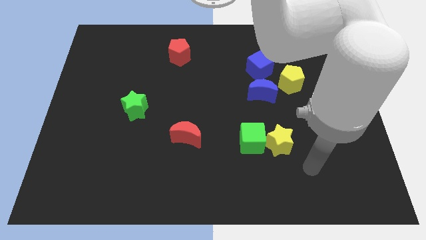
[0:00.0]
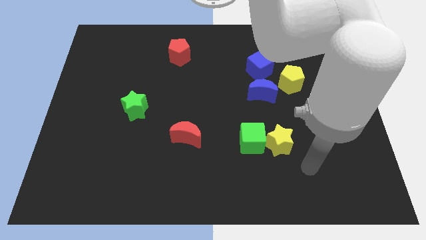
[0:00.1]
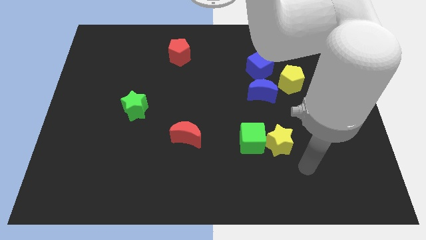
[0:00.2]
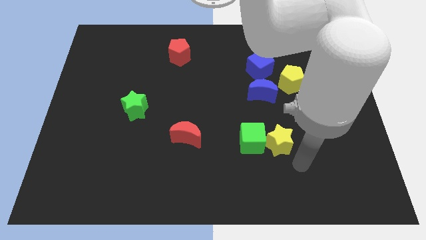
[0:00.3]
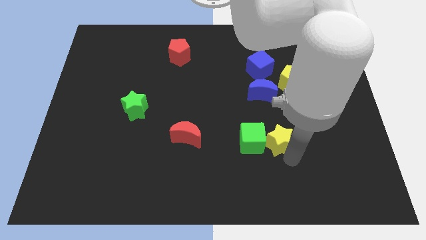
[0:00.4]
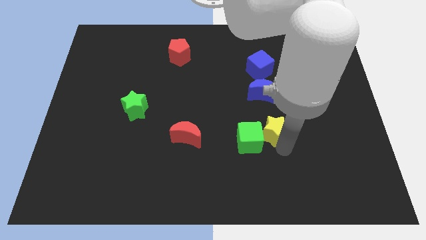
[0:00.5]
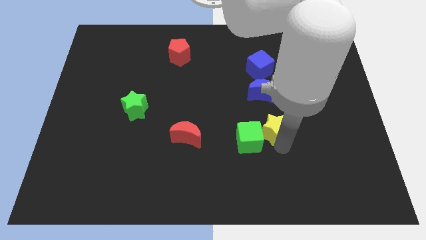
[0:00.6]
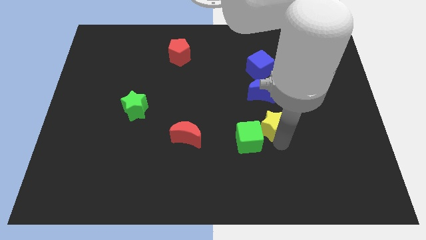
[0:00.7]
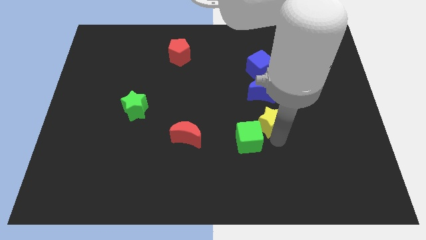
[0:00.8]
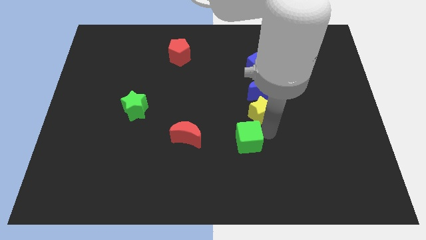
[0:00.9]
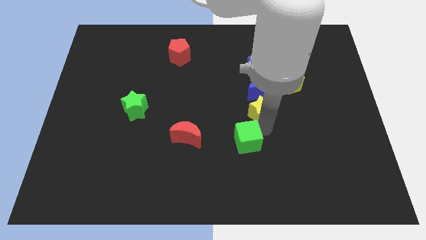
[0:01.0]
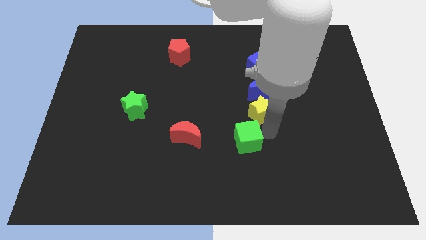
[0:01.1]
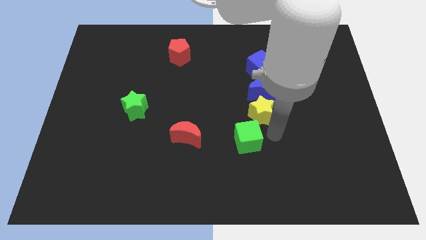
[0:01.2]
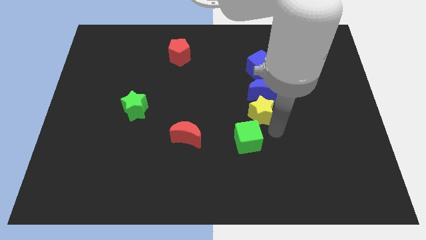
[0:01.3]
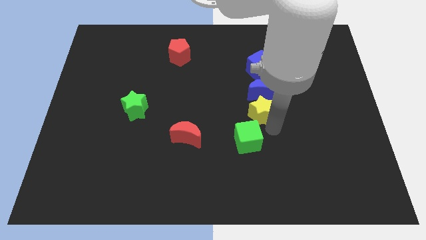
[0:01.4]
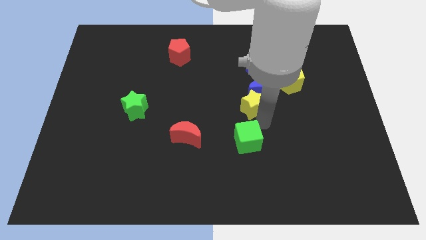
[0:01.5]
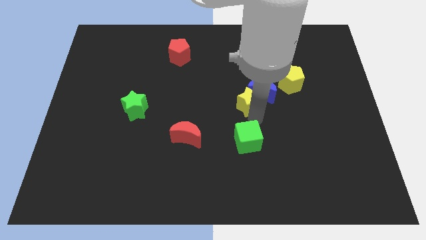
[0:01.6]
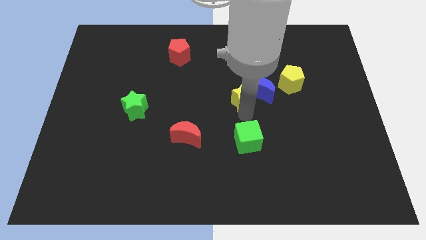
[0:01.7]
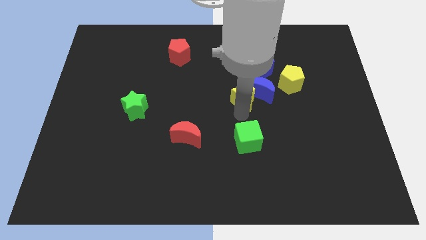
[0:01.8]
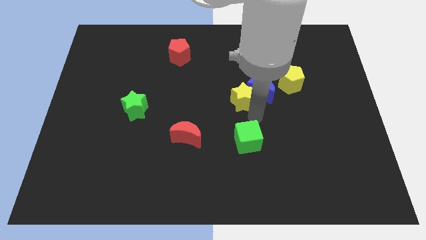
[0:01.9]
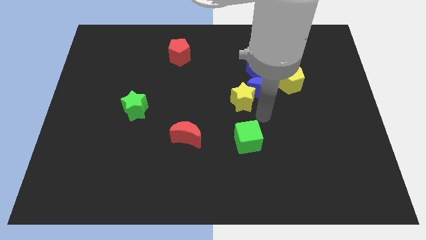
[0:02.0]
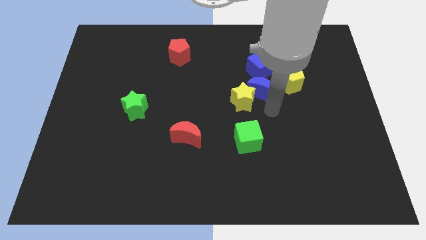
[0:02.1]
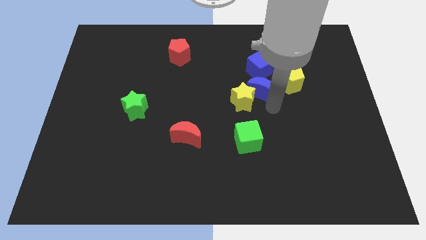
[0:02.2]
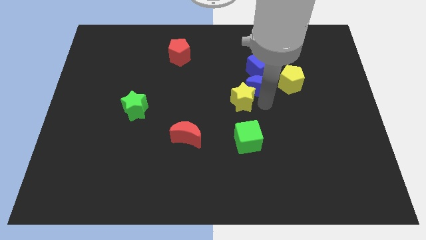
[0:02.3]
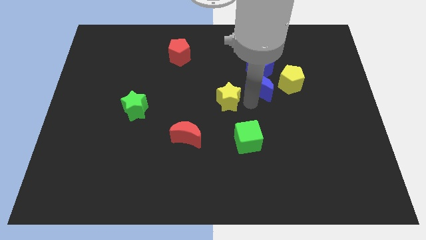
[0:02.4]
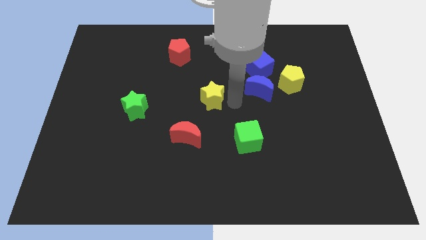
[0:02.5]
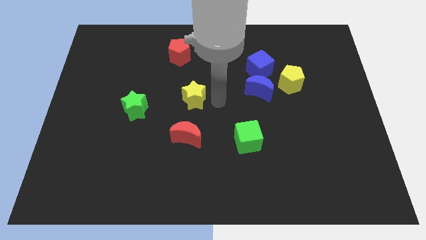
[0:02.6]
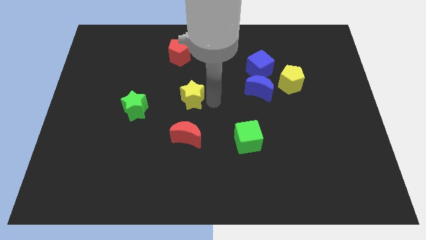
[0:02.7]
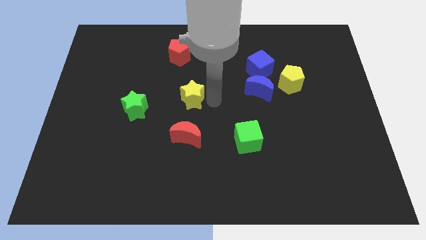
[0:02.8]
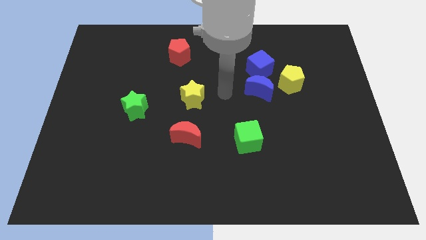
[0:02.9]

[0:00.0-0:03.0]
push yellow star above red crescent

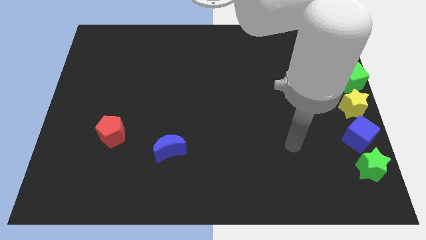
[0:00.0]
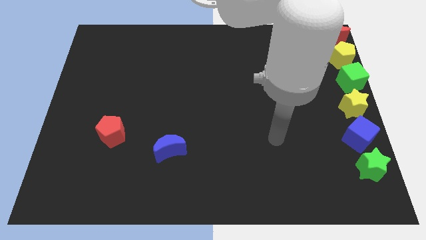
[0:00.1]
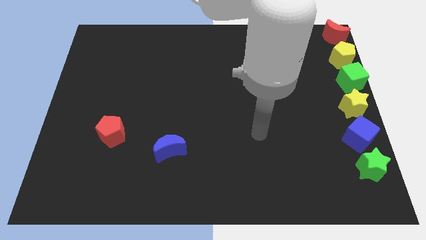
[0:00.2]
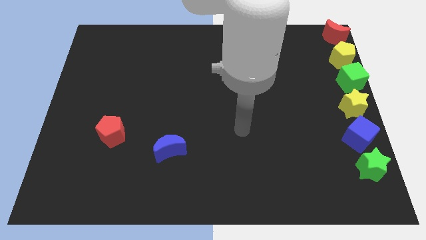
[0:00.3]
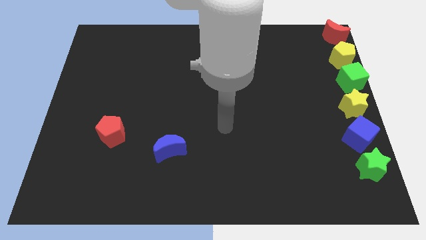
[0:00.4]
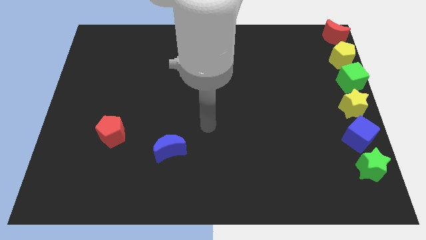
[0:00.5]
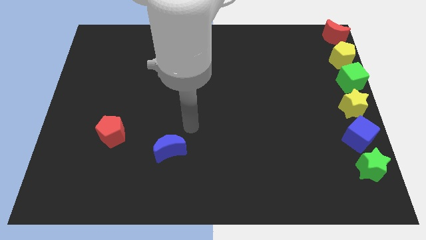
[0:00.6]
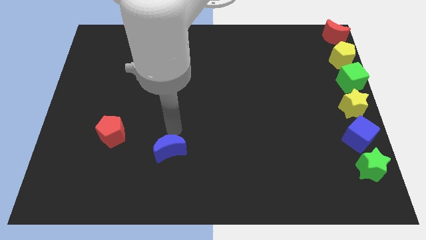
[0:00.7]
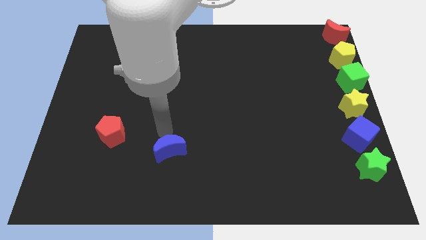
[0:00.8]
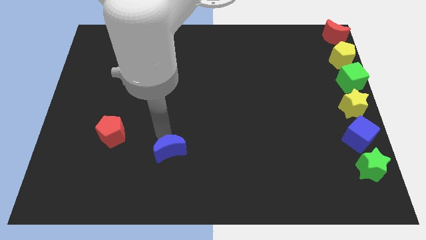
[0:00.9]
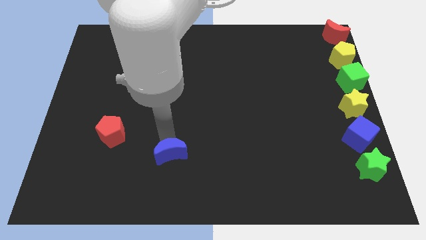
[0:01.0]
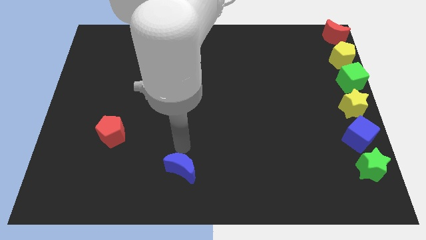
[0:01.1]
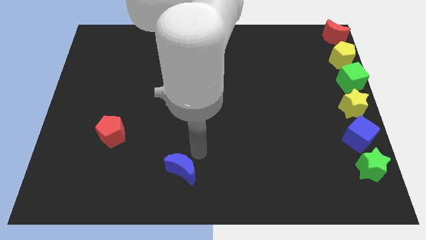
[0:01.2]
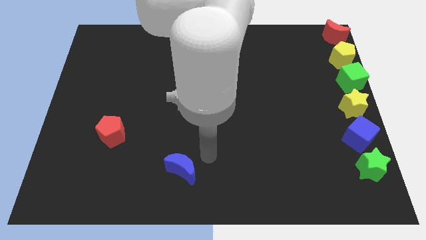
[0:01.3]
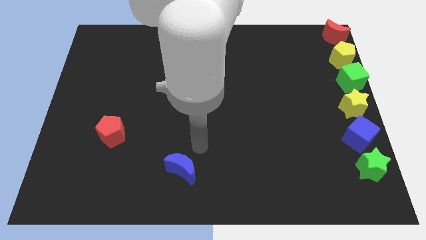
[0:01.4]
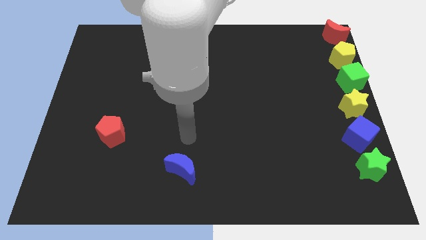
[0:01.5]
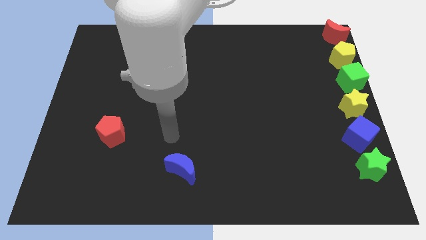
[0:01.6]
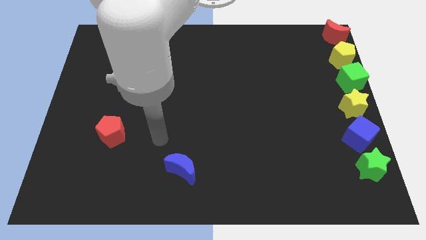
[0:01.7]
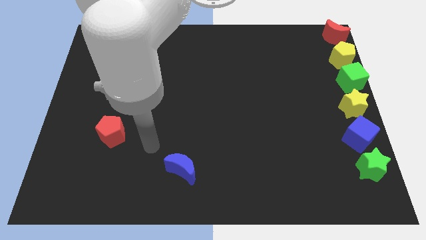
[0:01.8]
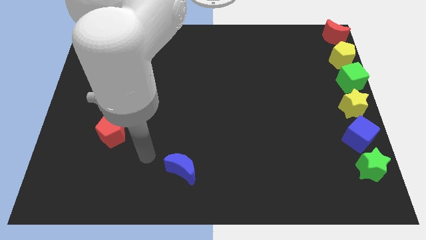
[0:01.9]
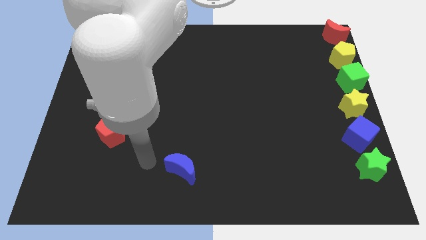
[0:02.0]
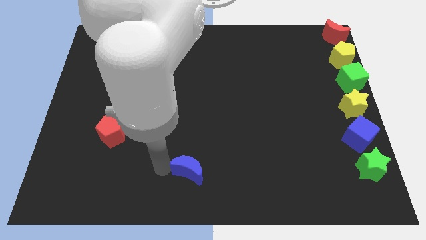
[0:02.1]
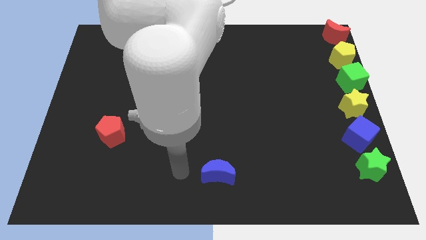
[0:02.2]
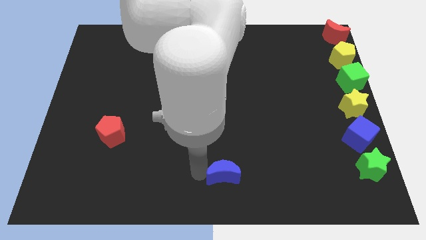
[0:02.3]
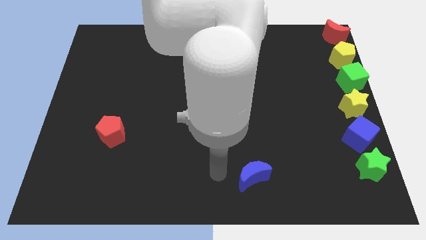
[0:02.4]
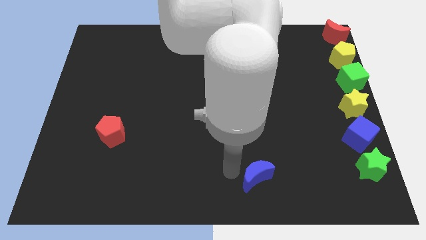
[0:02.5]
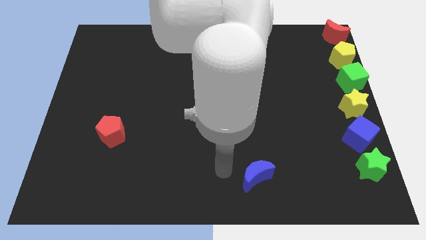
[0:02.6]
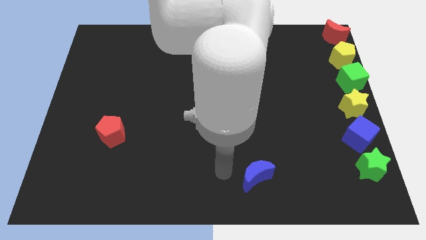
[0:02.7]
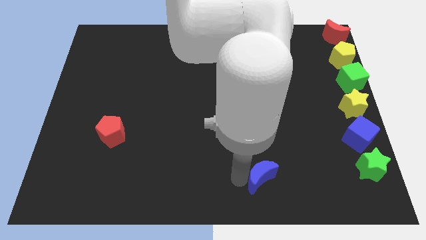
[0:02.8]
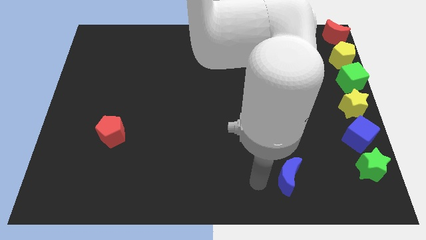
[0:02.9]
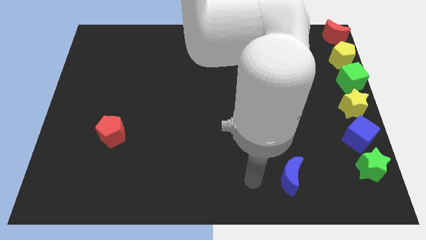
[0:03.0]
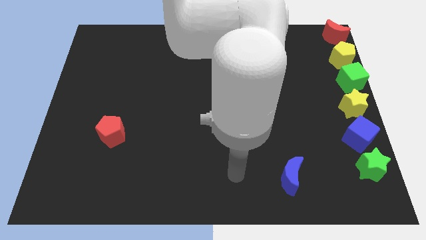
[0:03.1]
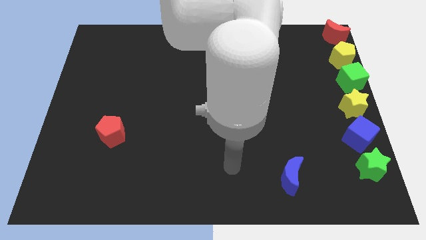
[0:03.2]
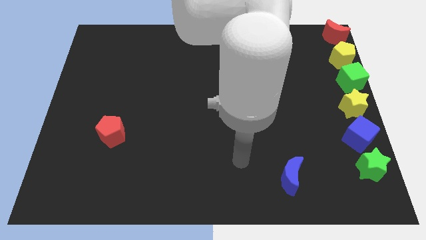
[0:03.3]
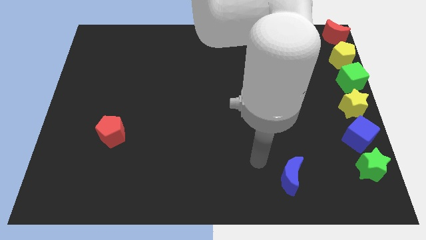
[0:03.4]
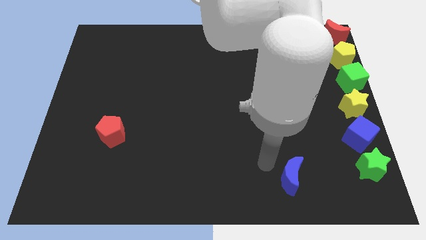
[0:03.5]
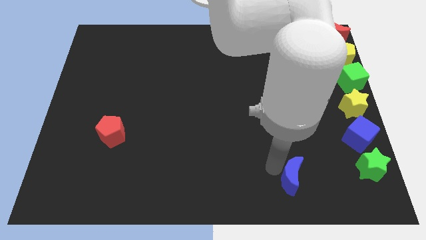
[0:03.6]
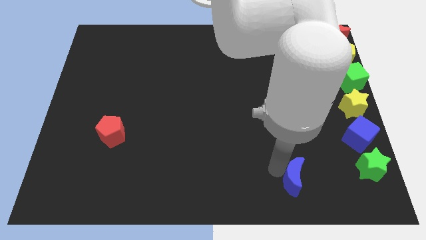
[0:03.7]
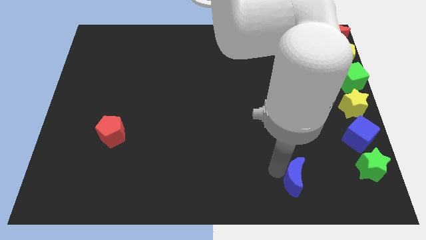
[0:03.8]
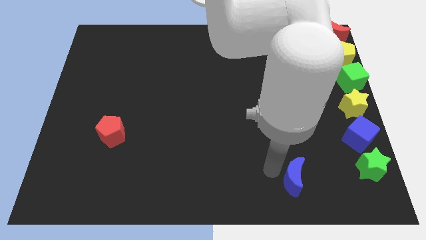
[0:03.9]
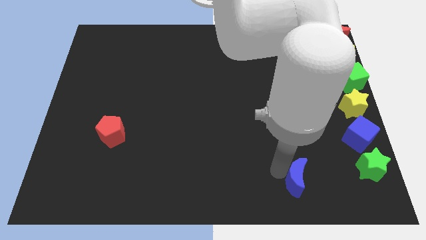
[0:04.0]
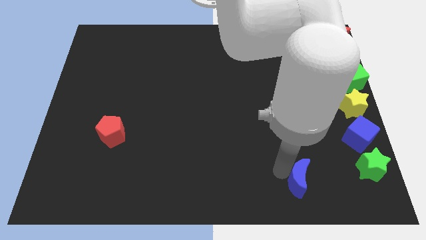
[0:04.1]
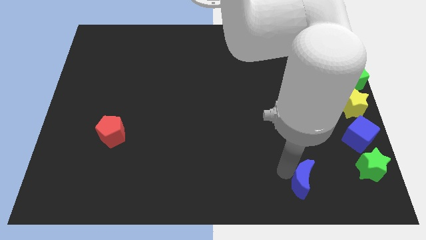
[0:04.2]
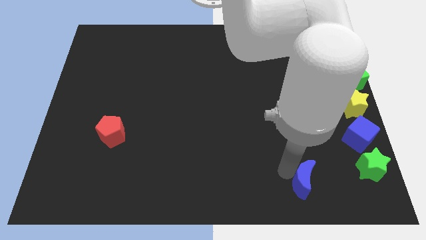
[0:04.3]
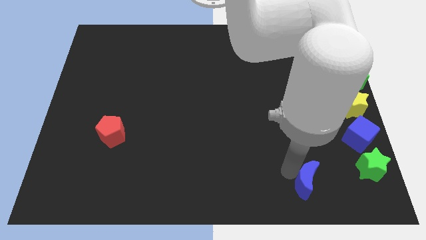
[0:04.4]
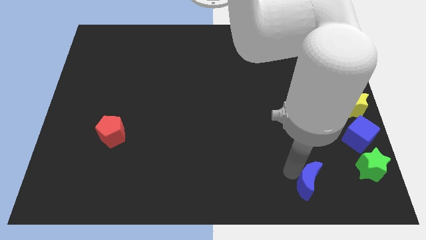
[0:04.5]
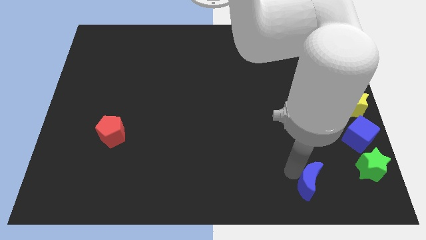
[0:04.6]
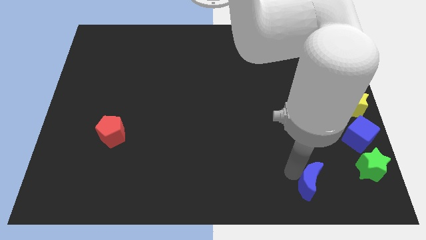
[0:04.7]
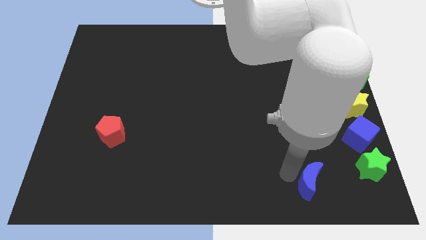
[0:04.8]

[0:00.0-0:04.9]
slide the blue moon towards the right side of the board

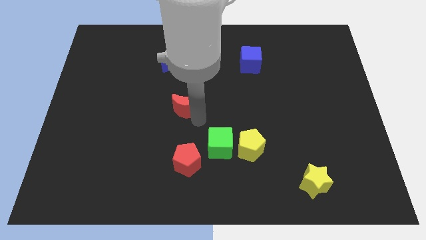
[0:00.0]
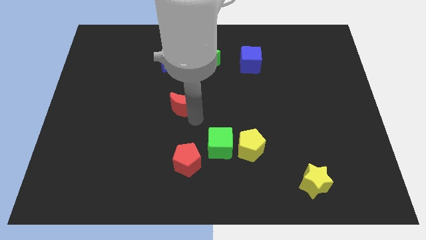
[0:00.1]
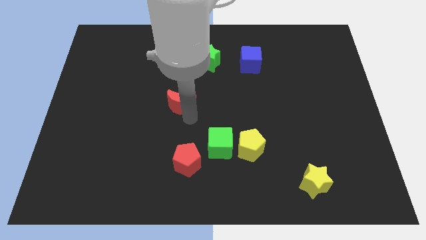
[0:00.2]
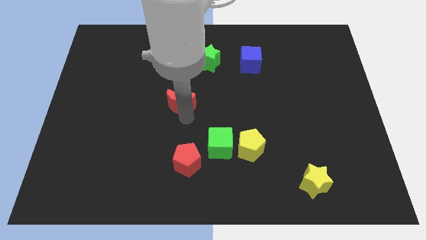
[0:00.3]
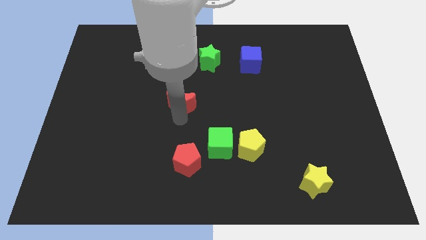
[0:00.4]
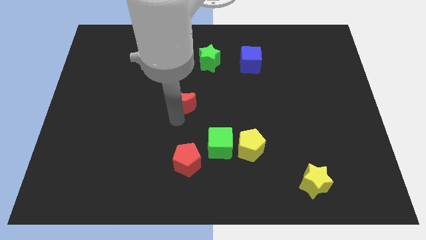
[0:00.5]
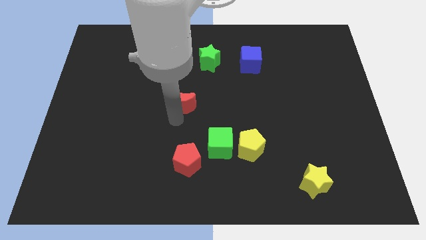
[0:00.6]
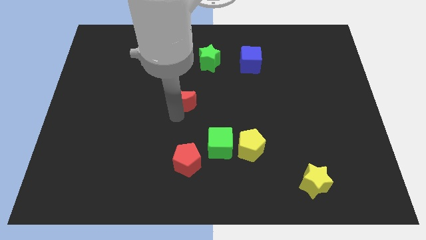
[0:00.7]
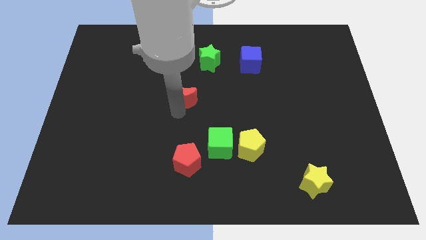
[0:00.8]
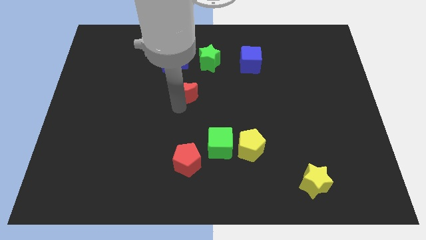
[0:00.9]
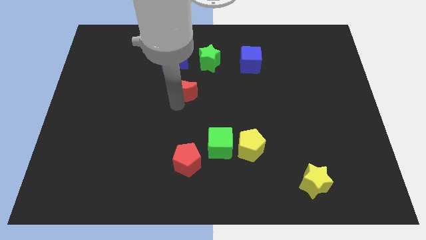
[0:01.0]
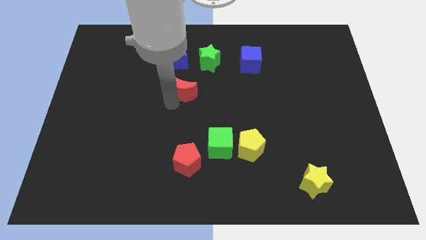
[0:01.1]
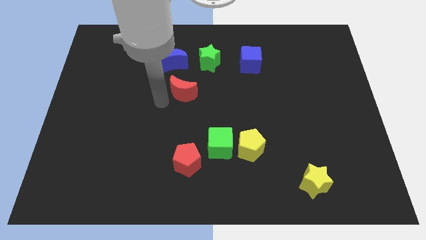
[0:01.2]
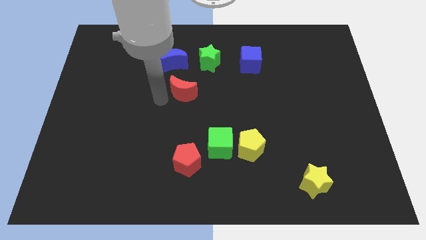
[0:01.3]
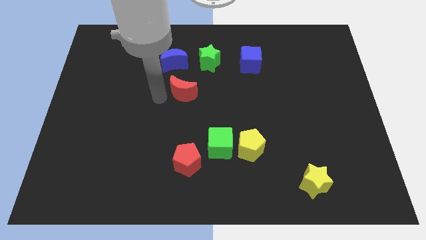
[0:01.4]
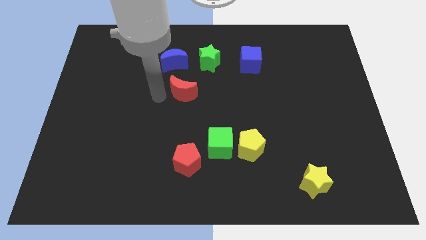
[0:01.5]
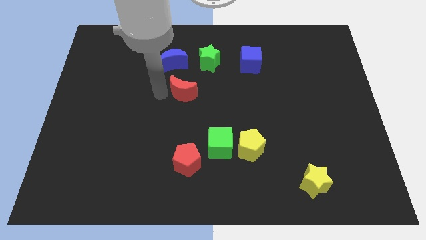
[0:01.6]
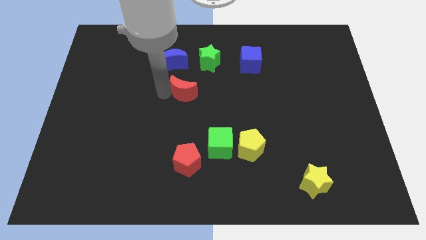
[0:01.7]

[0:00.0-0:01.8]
push the red moon up slightly
